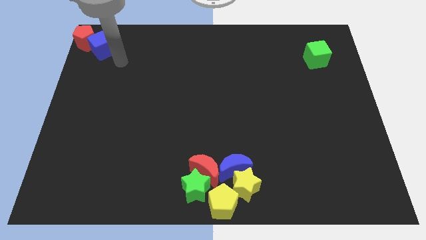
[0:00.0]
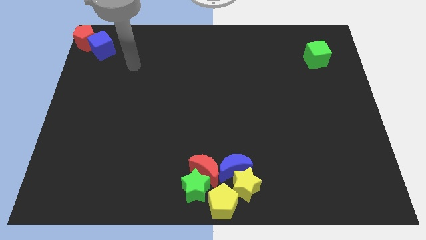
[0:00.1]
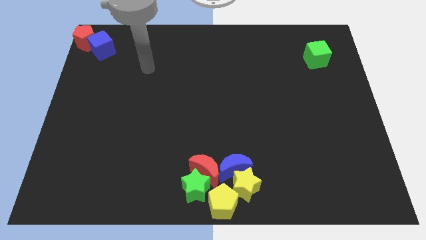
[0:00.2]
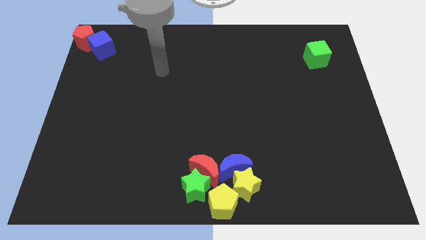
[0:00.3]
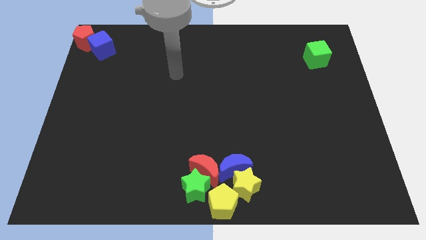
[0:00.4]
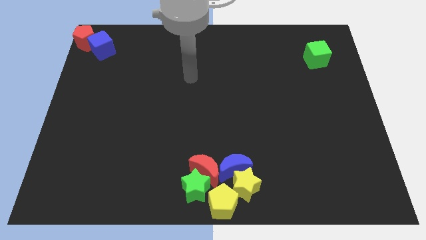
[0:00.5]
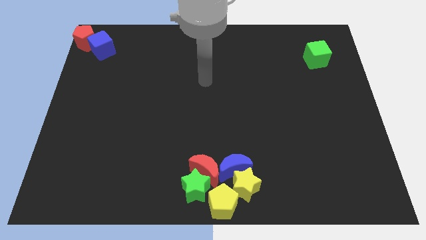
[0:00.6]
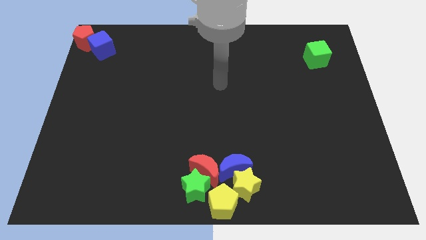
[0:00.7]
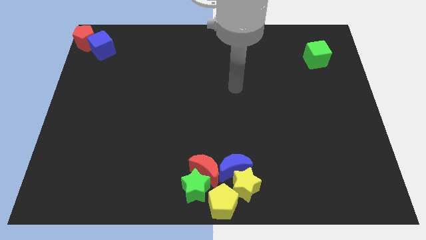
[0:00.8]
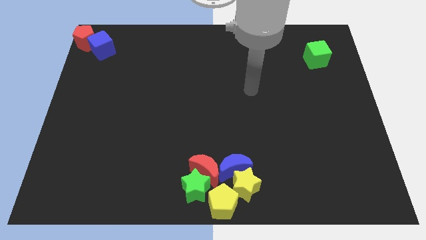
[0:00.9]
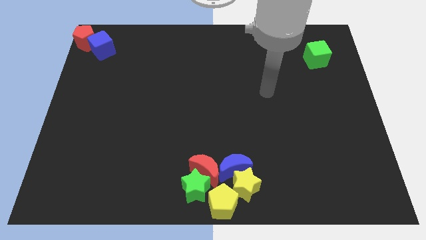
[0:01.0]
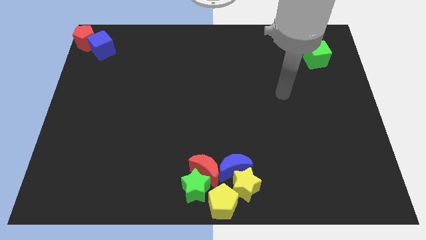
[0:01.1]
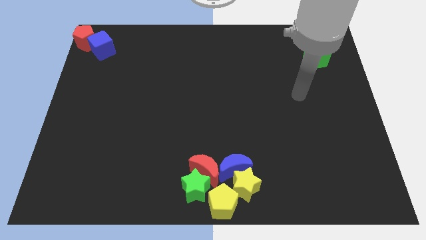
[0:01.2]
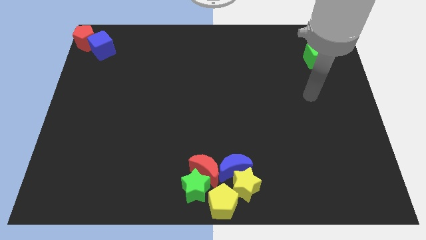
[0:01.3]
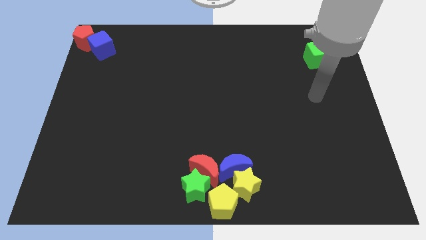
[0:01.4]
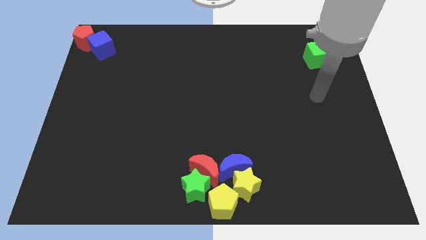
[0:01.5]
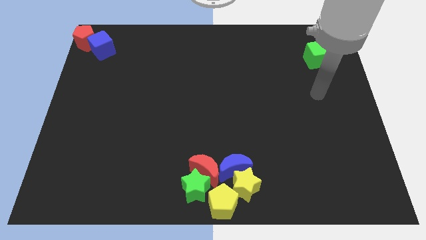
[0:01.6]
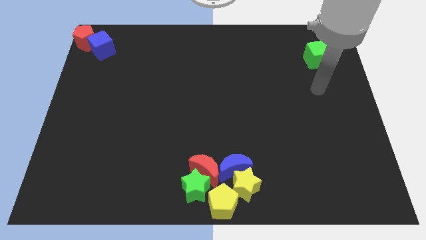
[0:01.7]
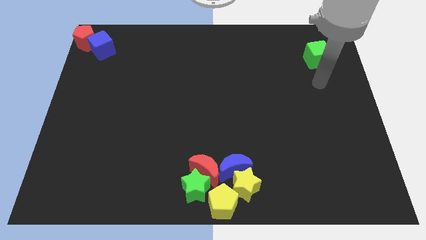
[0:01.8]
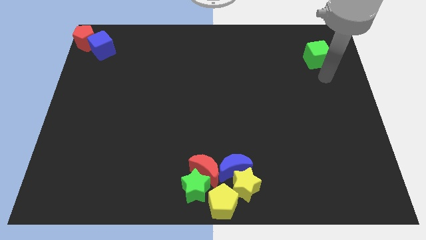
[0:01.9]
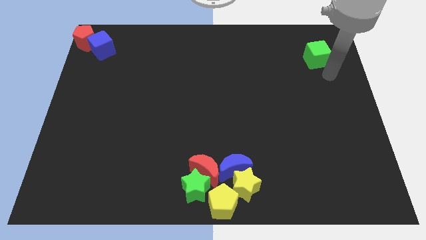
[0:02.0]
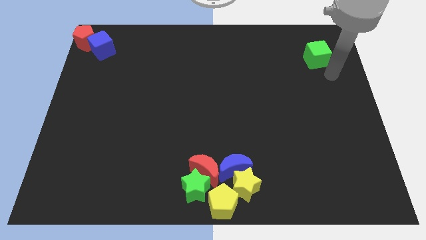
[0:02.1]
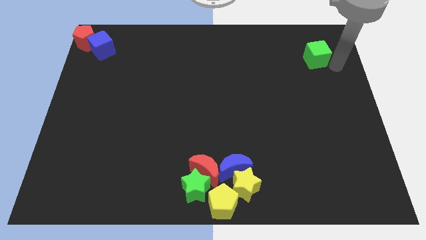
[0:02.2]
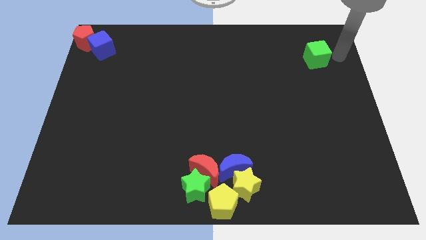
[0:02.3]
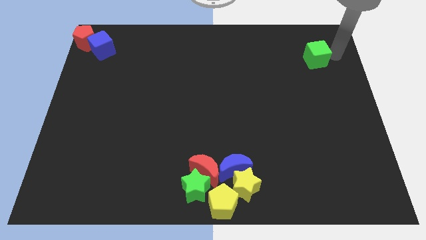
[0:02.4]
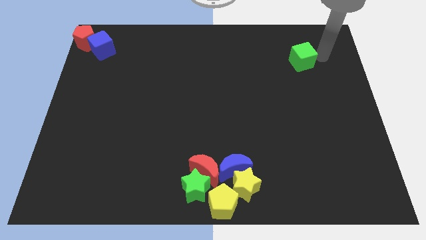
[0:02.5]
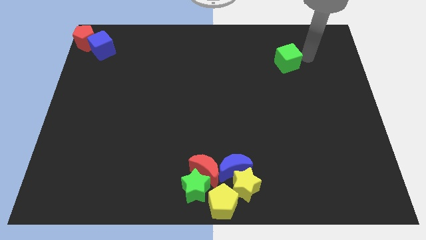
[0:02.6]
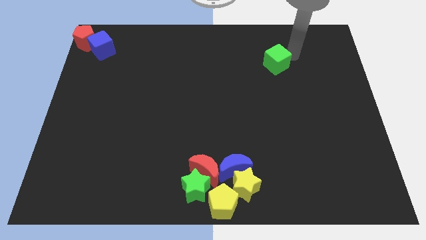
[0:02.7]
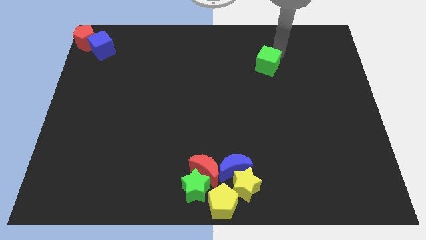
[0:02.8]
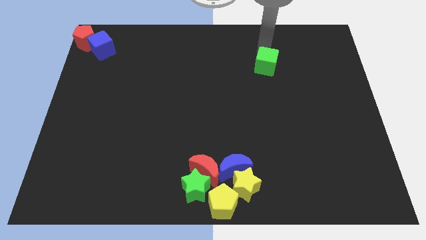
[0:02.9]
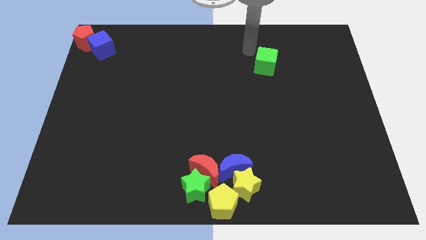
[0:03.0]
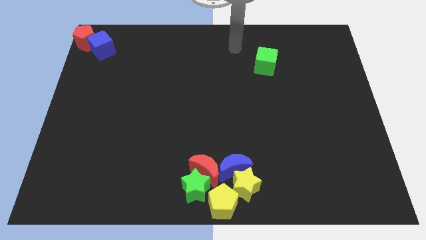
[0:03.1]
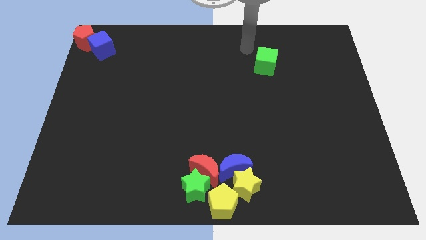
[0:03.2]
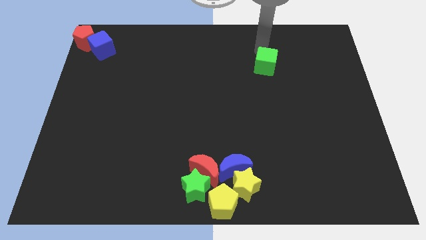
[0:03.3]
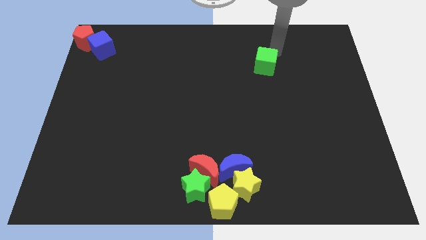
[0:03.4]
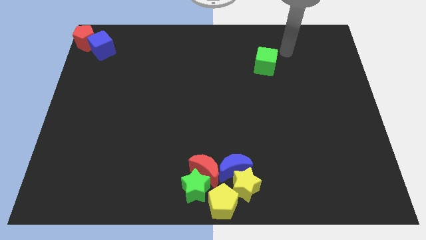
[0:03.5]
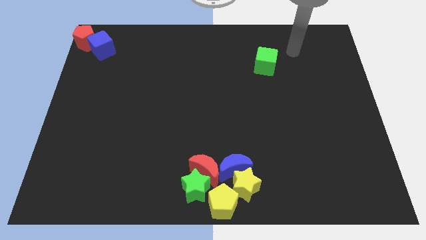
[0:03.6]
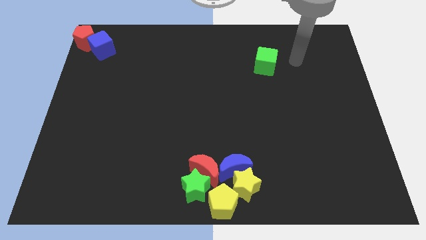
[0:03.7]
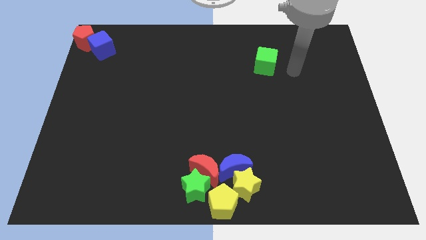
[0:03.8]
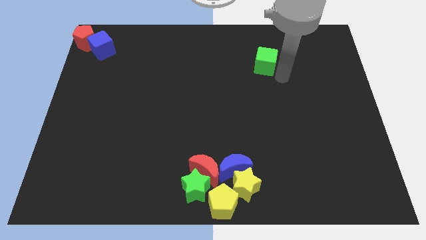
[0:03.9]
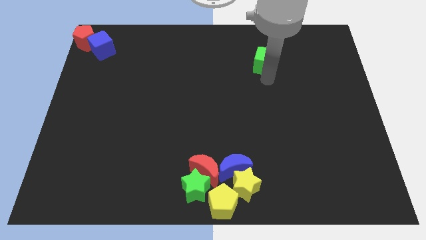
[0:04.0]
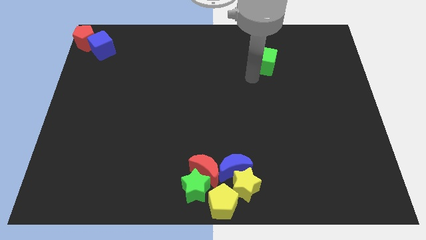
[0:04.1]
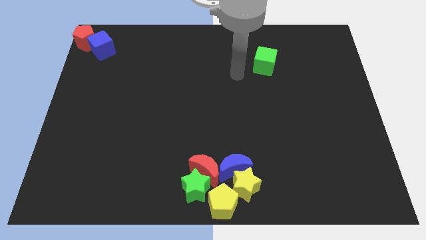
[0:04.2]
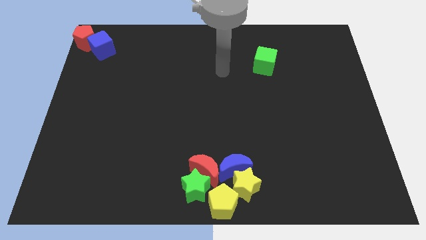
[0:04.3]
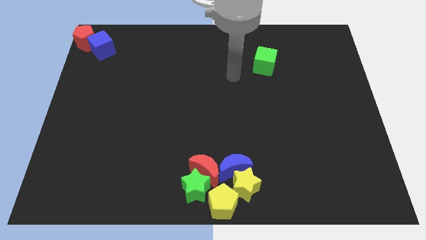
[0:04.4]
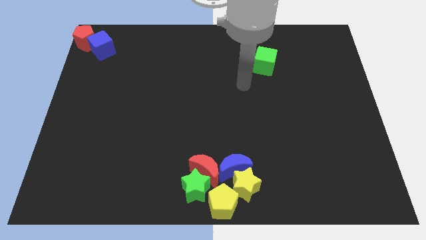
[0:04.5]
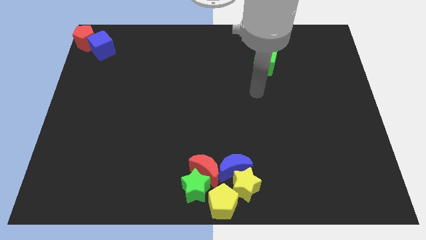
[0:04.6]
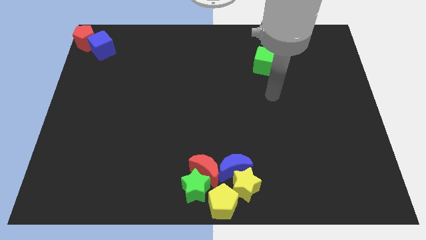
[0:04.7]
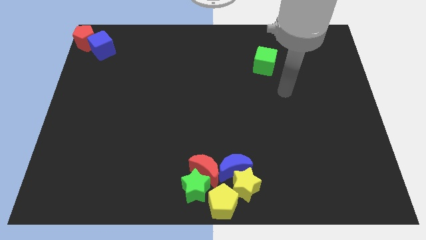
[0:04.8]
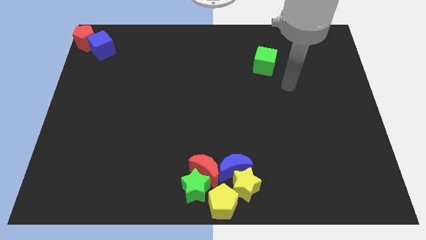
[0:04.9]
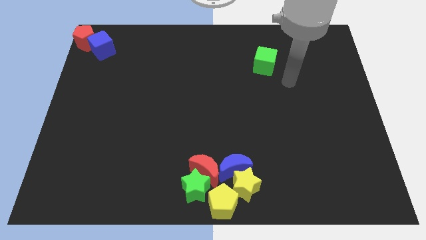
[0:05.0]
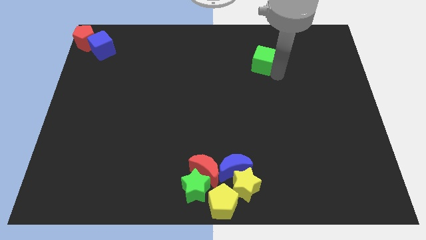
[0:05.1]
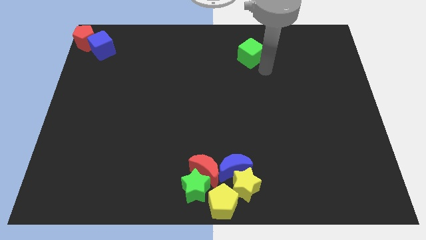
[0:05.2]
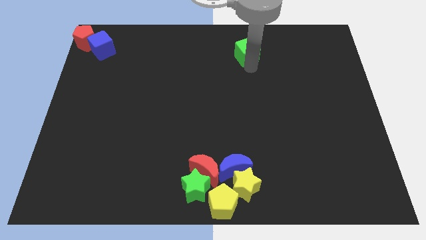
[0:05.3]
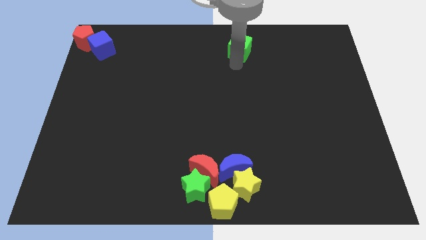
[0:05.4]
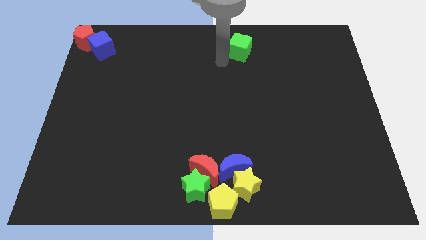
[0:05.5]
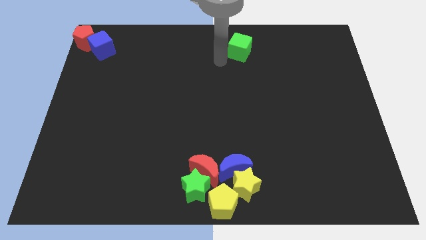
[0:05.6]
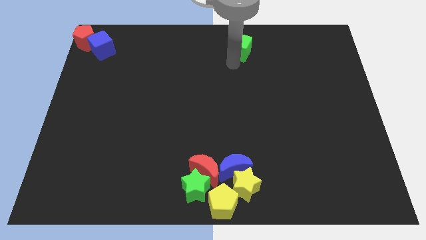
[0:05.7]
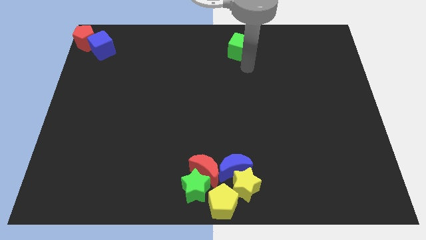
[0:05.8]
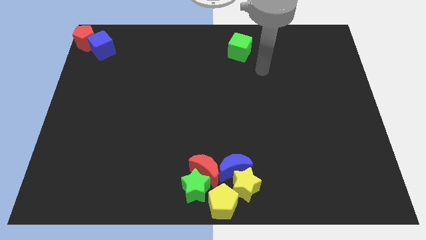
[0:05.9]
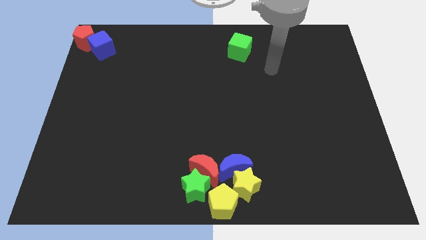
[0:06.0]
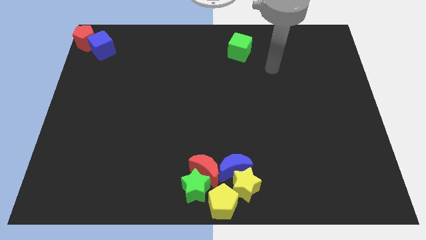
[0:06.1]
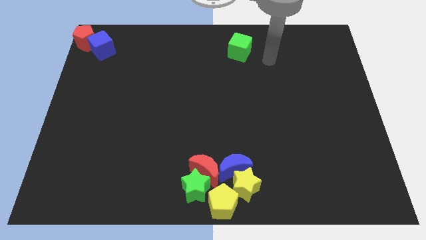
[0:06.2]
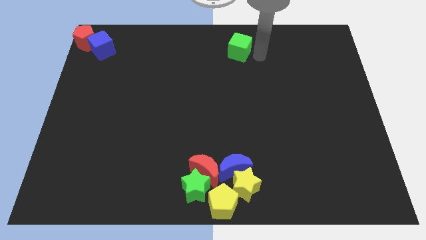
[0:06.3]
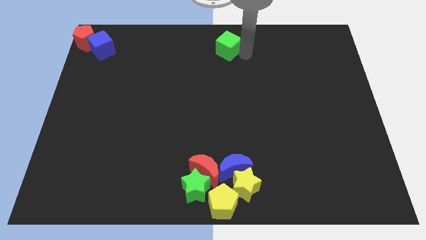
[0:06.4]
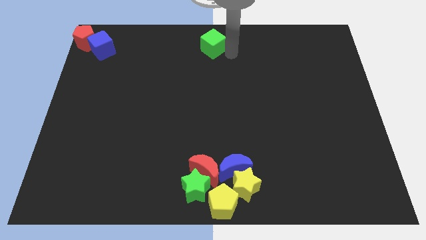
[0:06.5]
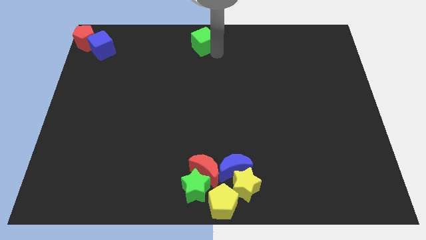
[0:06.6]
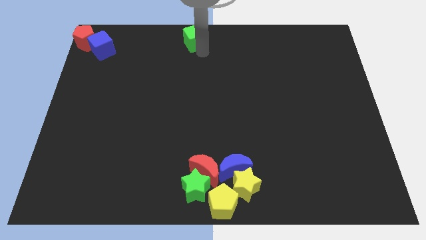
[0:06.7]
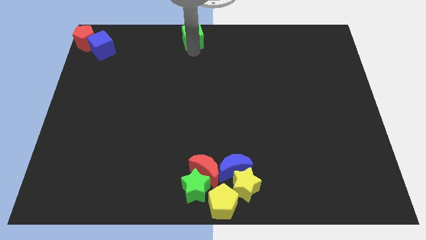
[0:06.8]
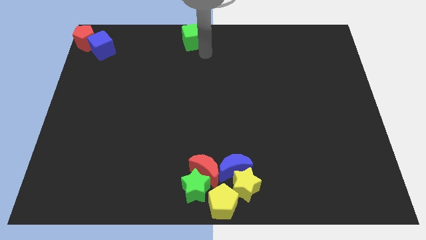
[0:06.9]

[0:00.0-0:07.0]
place the green cube above the red crescent

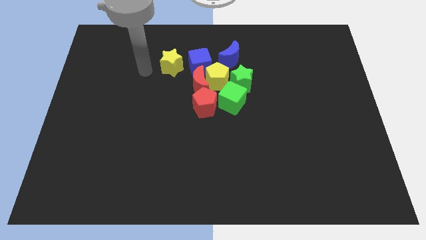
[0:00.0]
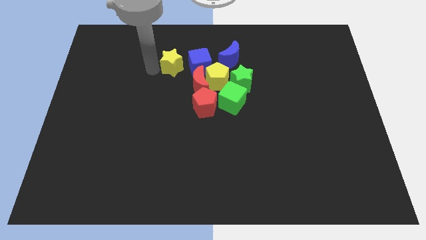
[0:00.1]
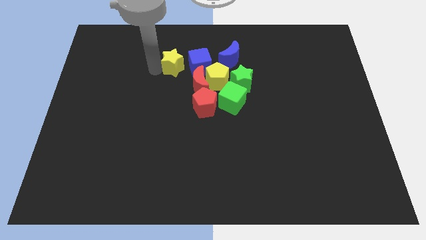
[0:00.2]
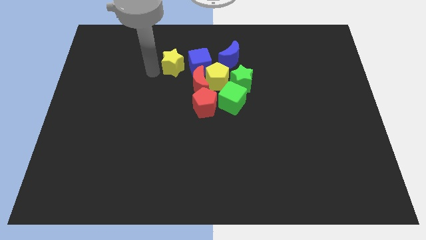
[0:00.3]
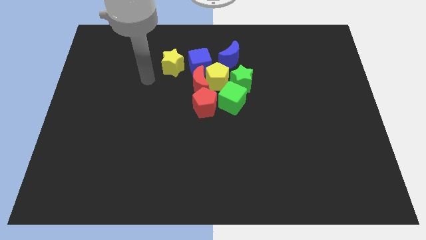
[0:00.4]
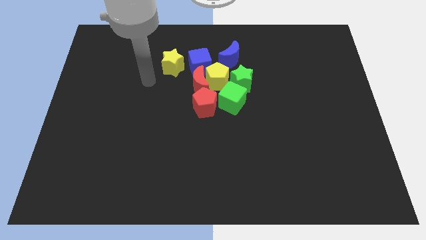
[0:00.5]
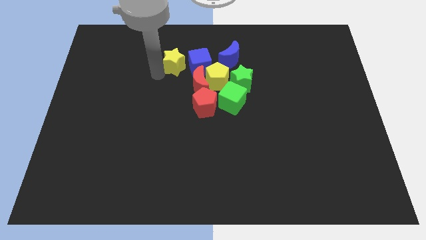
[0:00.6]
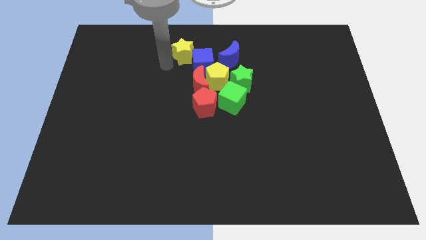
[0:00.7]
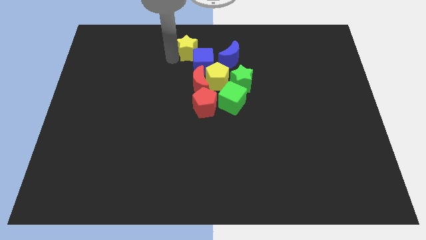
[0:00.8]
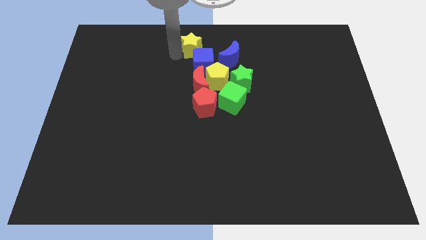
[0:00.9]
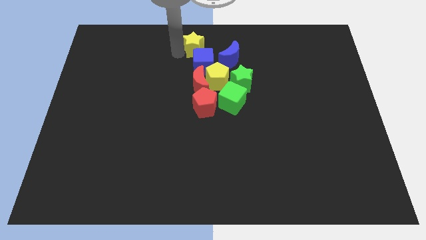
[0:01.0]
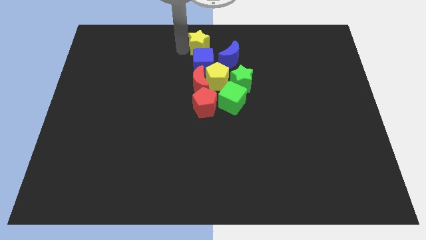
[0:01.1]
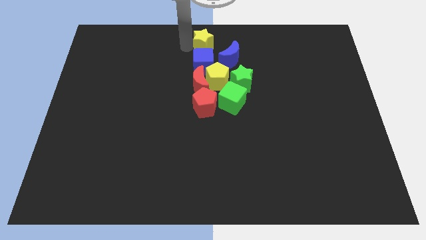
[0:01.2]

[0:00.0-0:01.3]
push the yellow star to the top of the blue cube

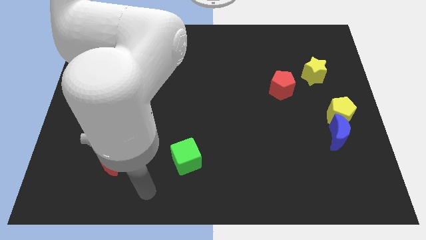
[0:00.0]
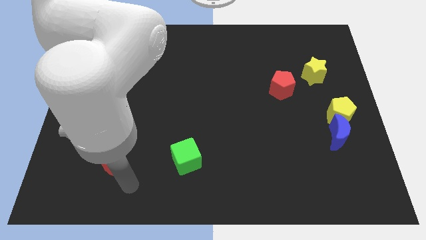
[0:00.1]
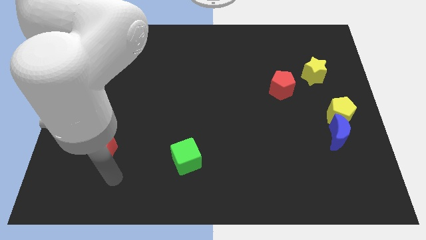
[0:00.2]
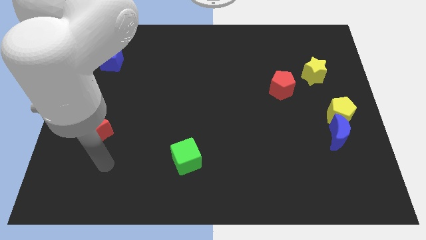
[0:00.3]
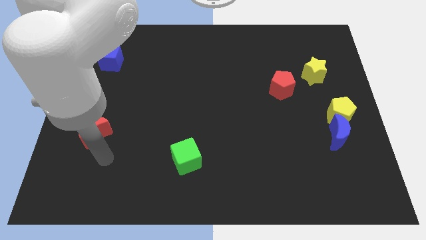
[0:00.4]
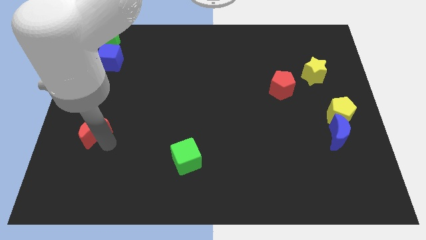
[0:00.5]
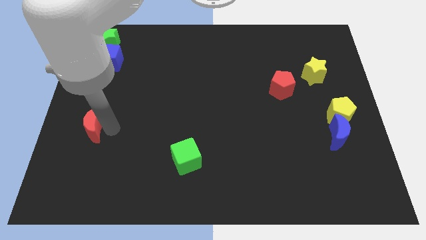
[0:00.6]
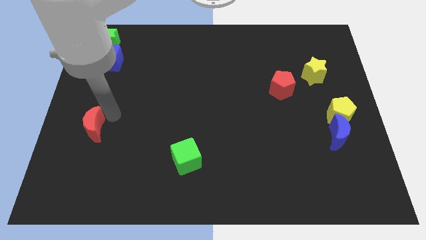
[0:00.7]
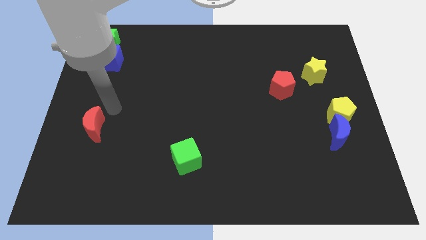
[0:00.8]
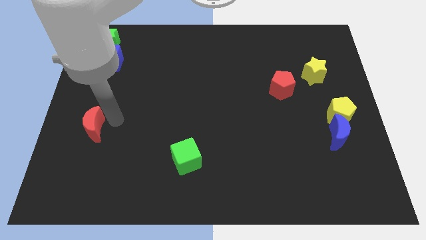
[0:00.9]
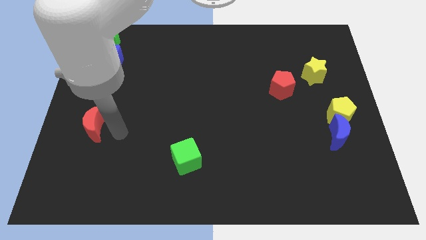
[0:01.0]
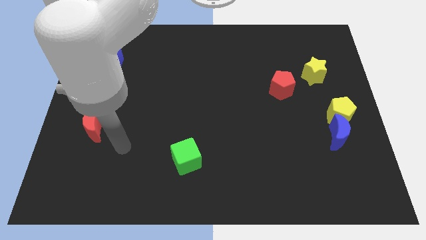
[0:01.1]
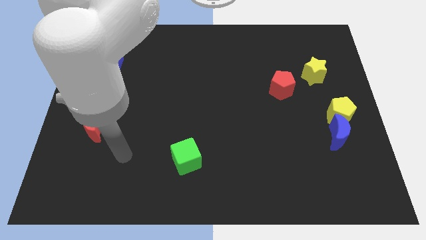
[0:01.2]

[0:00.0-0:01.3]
slightly push the red crescent towards the top of the board
